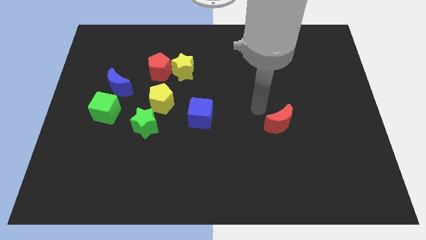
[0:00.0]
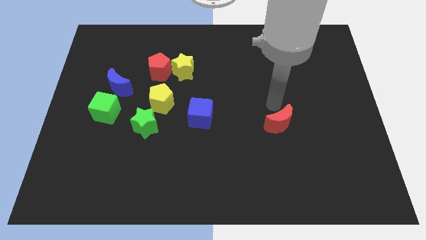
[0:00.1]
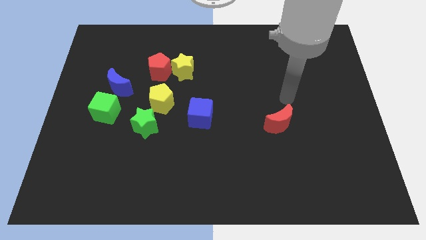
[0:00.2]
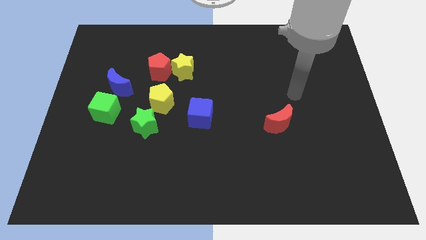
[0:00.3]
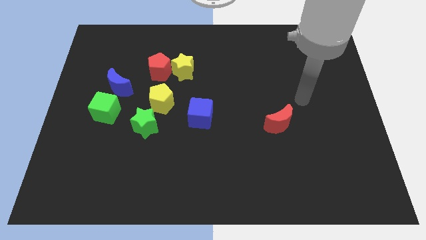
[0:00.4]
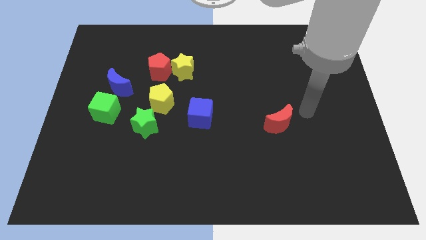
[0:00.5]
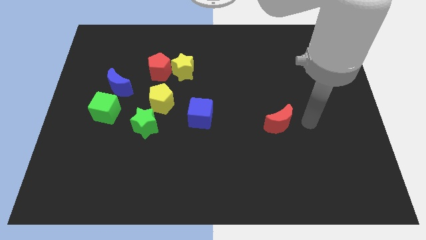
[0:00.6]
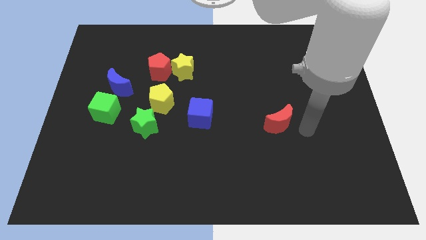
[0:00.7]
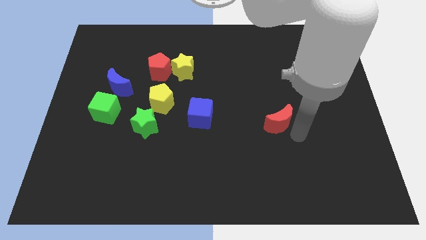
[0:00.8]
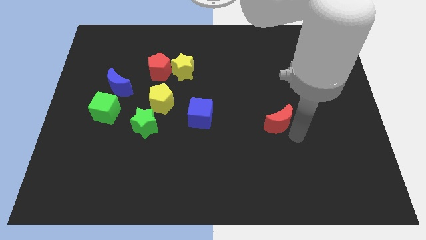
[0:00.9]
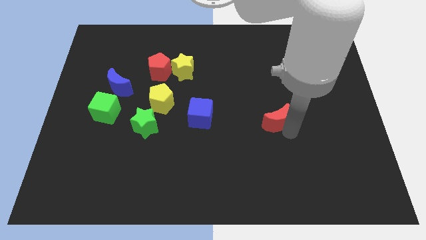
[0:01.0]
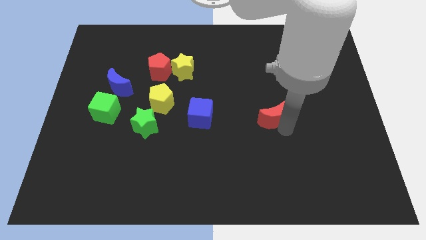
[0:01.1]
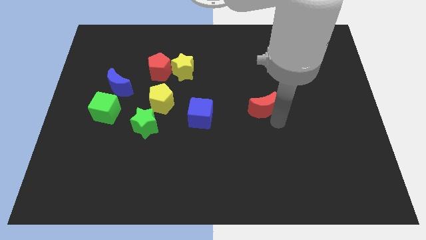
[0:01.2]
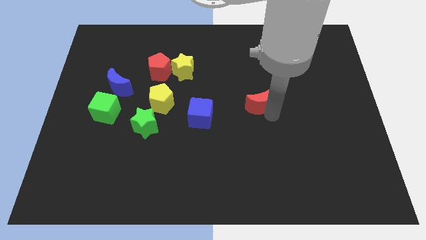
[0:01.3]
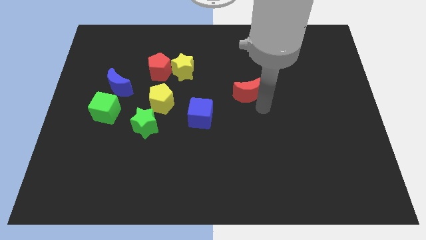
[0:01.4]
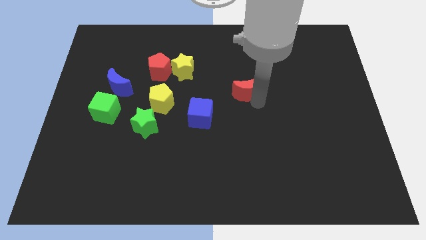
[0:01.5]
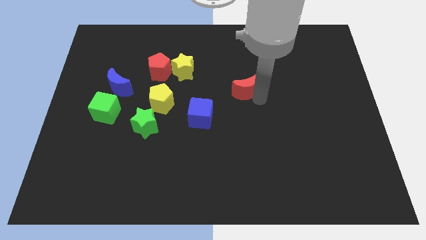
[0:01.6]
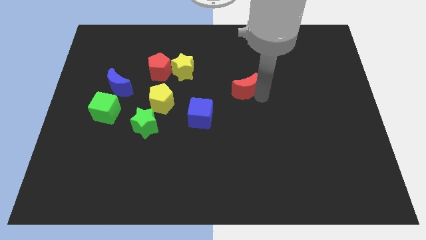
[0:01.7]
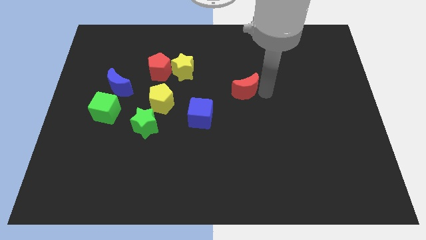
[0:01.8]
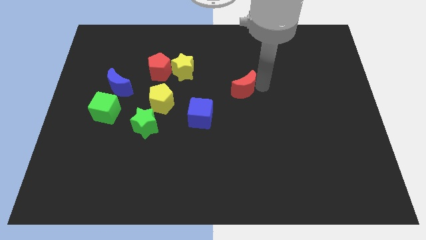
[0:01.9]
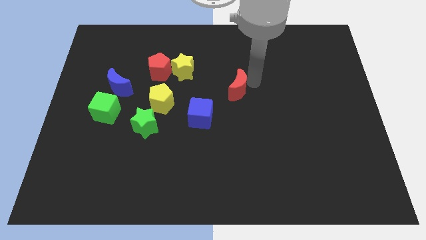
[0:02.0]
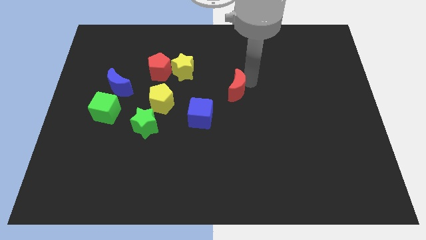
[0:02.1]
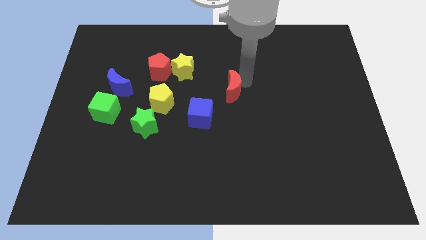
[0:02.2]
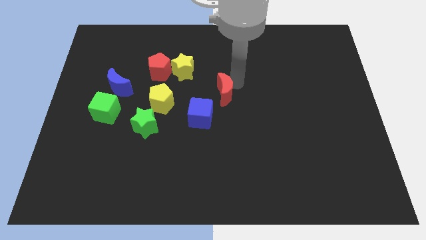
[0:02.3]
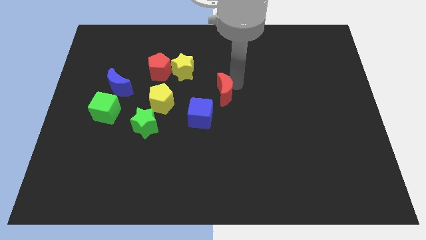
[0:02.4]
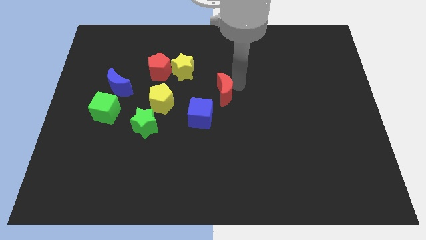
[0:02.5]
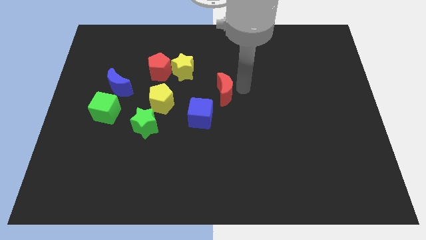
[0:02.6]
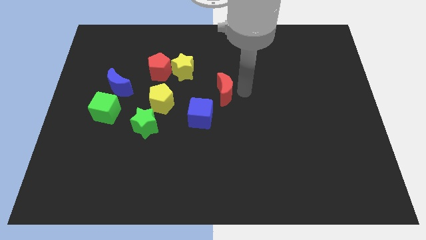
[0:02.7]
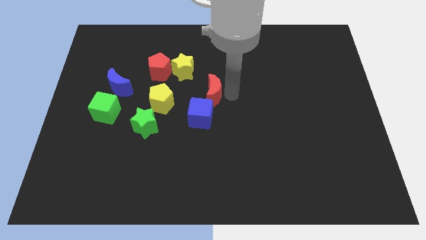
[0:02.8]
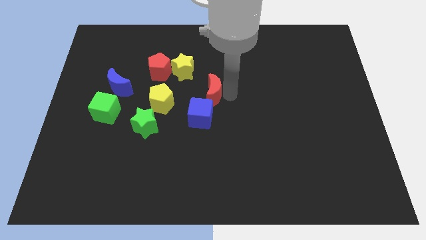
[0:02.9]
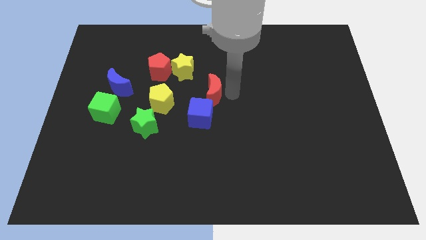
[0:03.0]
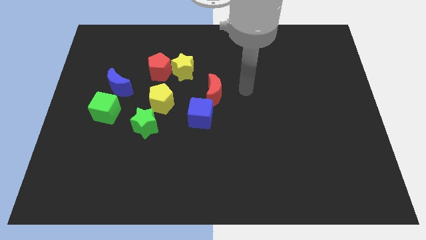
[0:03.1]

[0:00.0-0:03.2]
place the red moon diagonally top right to the yellow pentagon

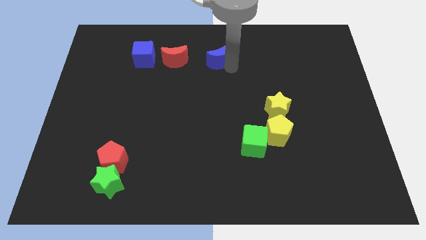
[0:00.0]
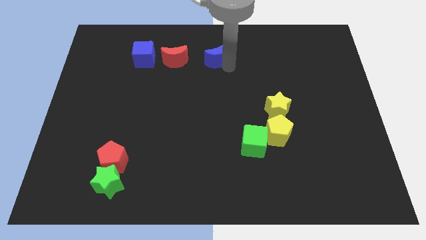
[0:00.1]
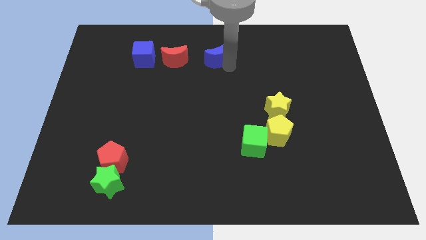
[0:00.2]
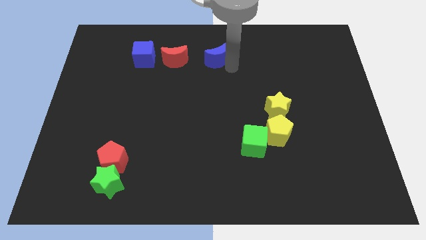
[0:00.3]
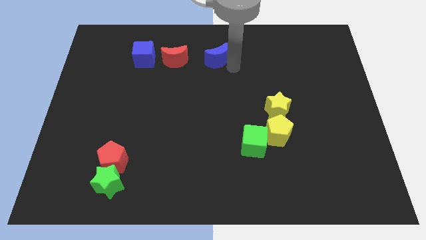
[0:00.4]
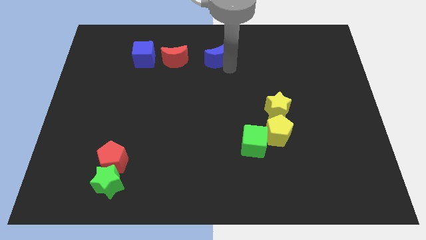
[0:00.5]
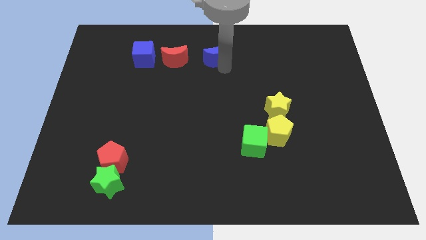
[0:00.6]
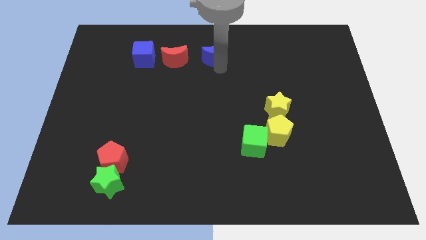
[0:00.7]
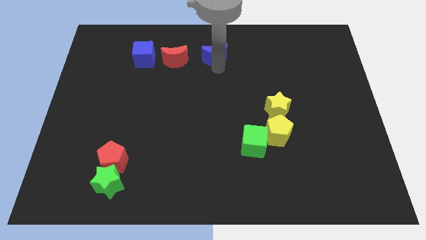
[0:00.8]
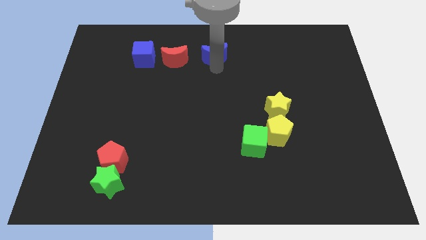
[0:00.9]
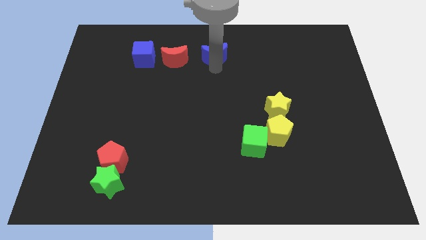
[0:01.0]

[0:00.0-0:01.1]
place blue crescent parallel right to red moon

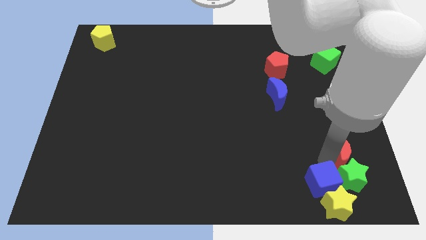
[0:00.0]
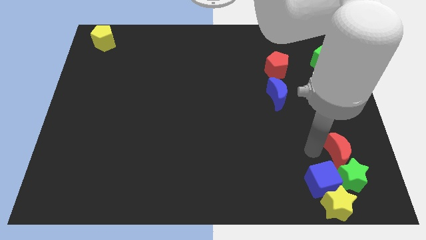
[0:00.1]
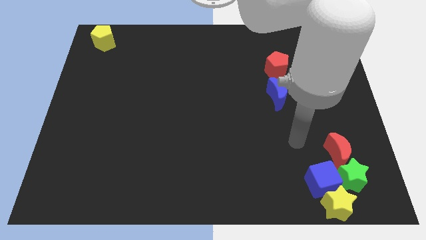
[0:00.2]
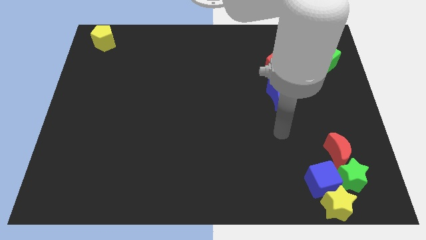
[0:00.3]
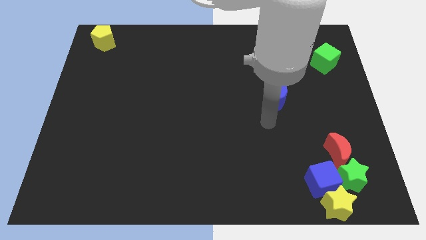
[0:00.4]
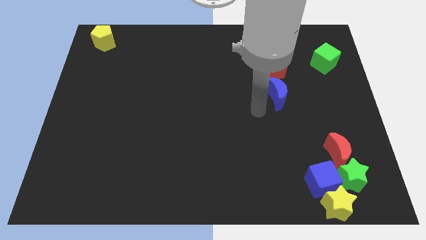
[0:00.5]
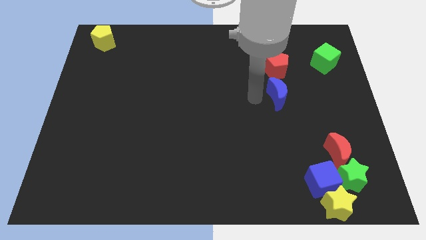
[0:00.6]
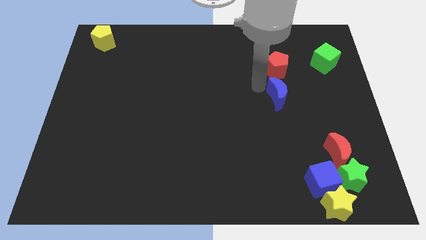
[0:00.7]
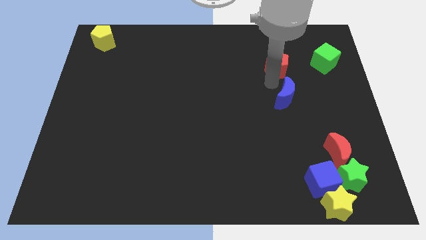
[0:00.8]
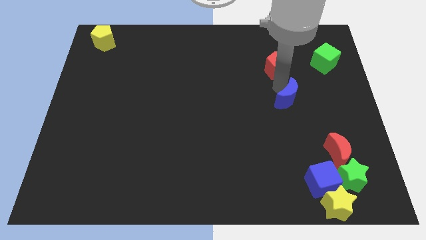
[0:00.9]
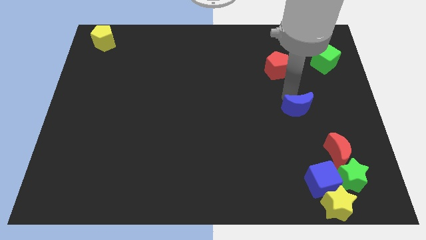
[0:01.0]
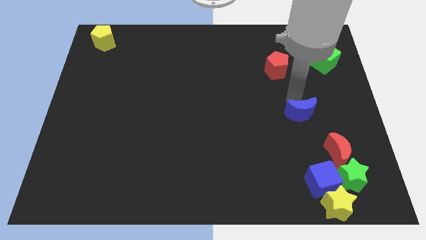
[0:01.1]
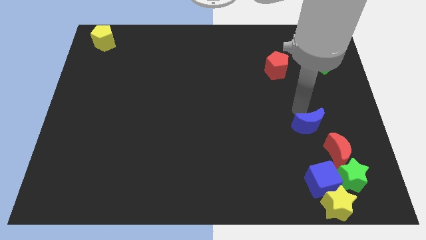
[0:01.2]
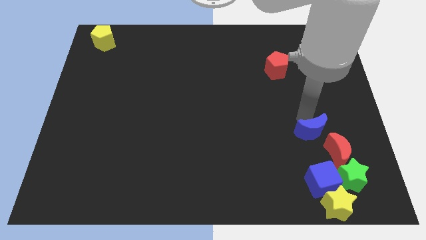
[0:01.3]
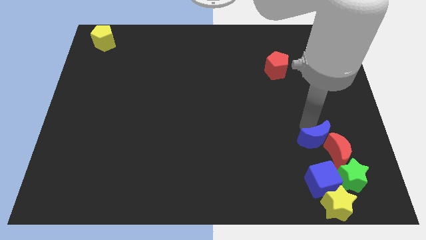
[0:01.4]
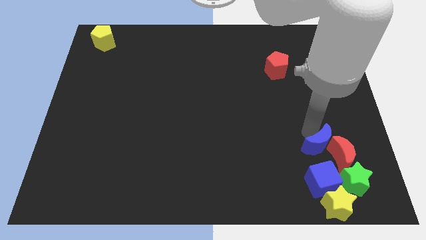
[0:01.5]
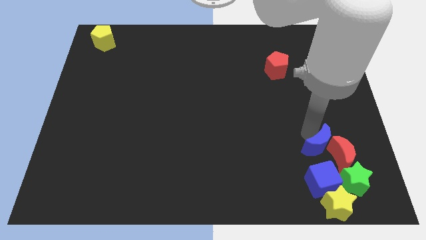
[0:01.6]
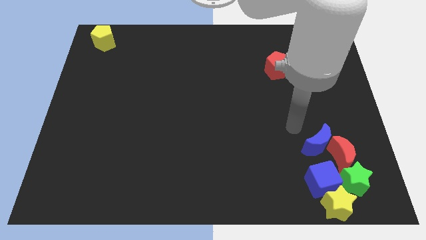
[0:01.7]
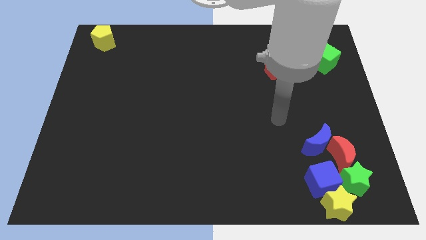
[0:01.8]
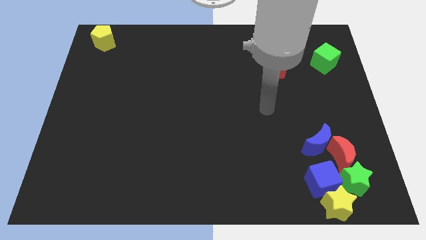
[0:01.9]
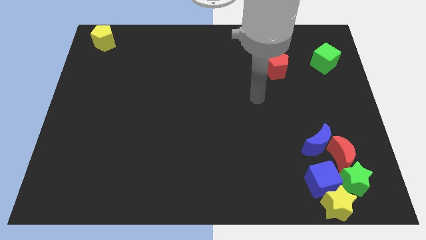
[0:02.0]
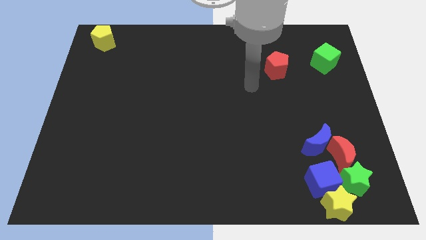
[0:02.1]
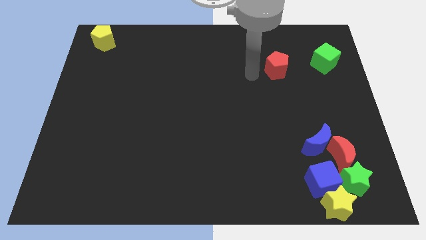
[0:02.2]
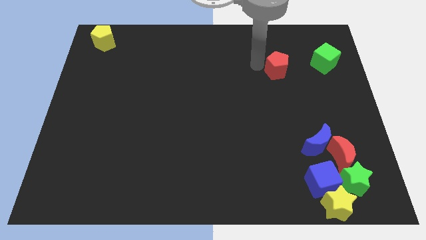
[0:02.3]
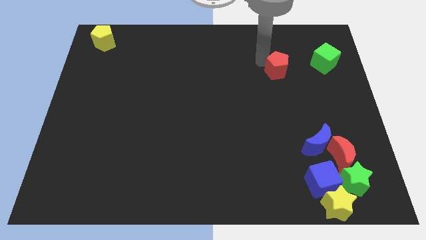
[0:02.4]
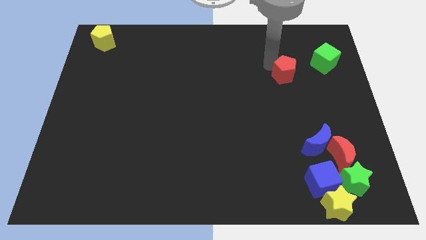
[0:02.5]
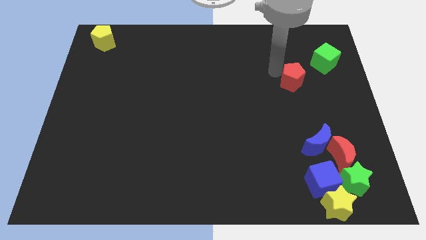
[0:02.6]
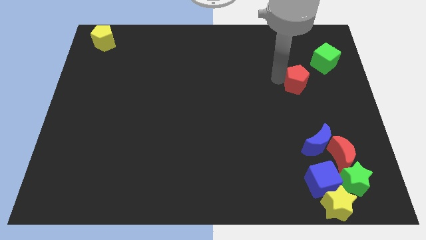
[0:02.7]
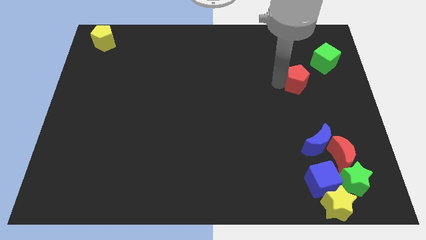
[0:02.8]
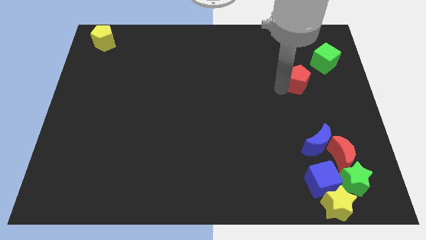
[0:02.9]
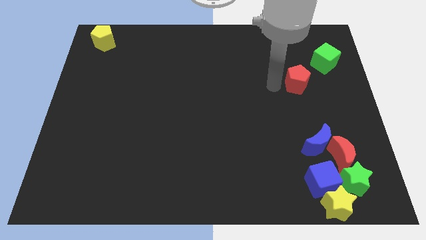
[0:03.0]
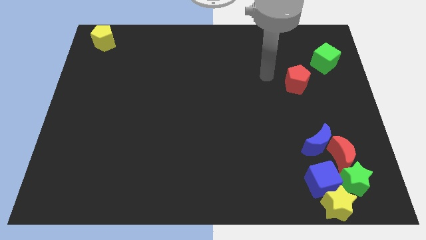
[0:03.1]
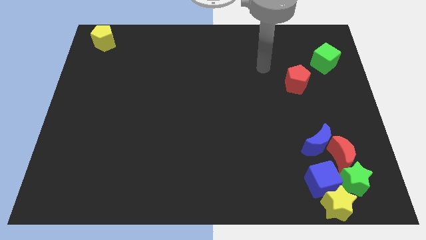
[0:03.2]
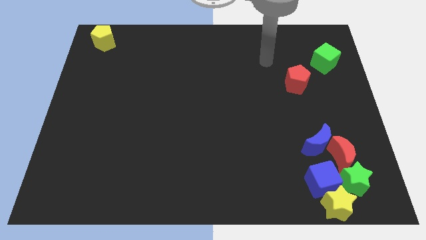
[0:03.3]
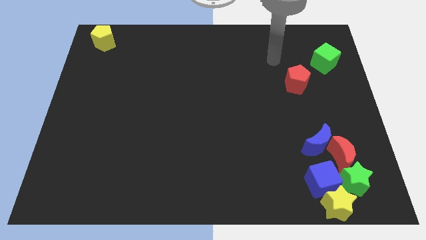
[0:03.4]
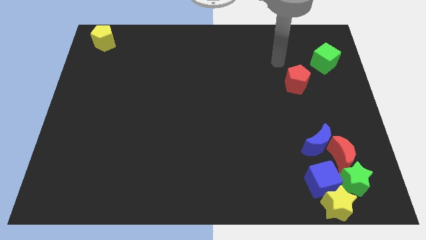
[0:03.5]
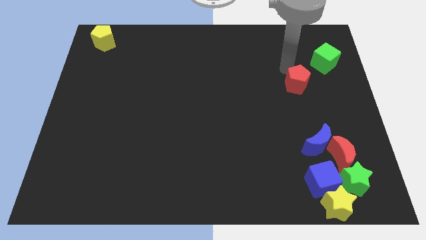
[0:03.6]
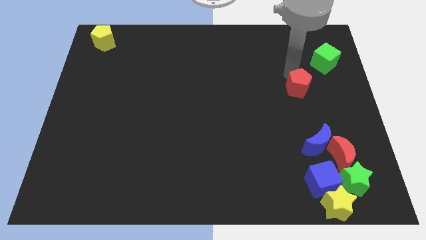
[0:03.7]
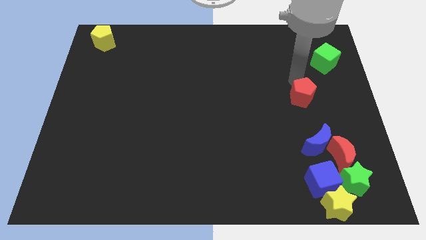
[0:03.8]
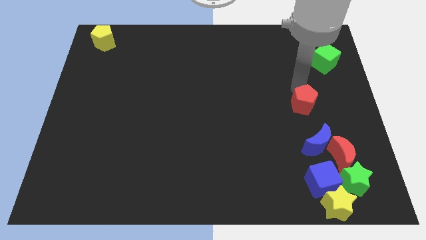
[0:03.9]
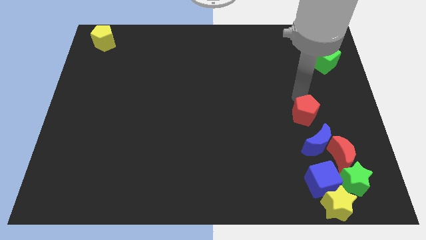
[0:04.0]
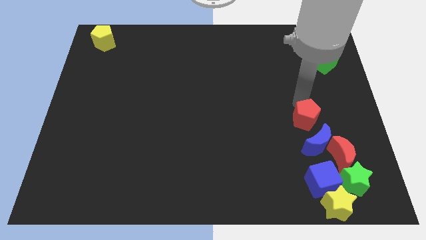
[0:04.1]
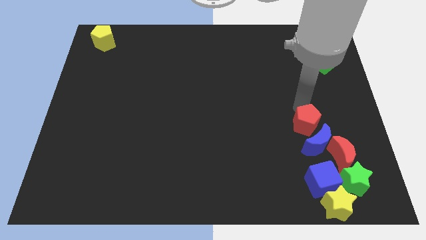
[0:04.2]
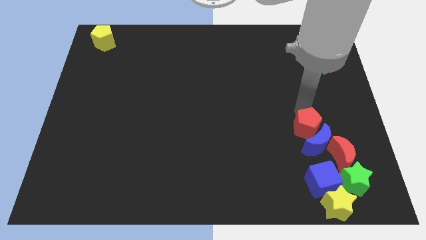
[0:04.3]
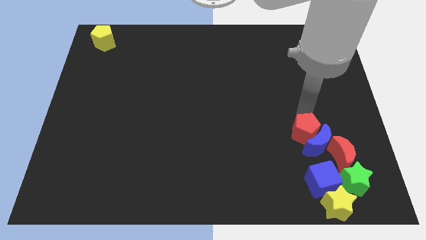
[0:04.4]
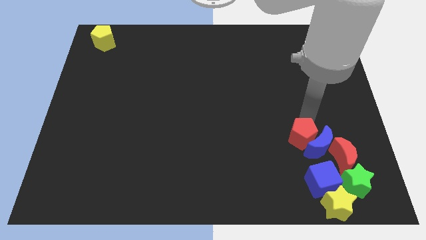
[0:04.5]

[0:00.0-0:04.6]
group up all the blocks except the green cube and yellow pentagon

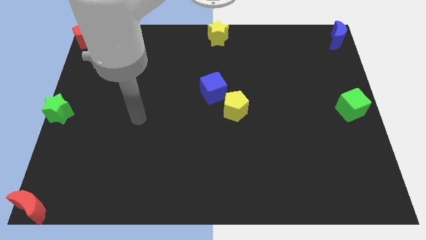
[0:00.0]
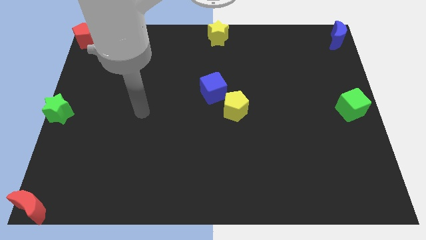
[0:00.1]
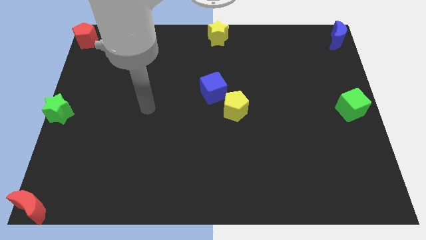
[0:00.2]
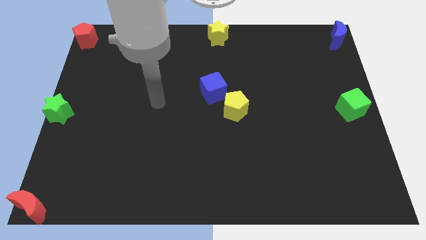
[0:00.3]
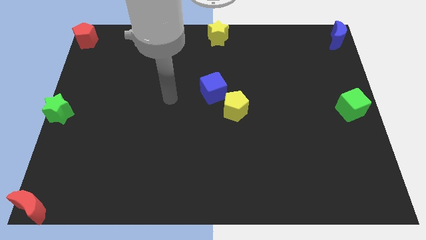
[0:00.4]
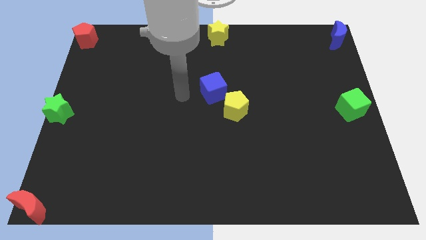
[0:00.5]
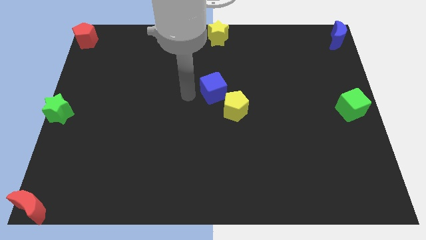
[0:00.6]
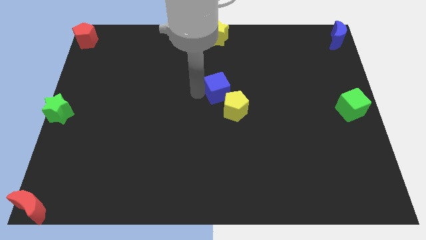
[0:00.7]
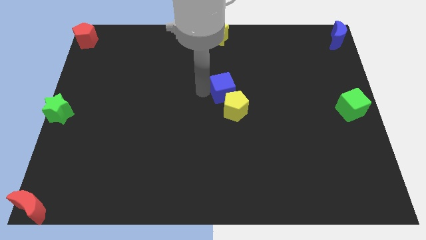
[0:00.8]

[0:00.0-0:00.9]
place the arm into the blue cube
